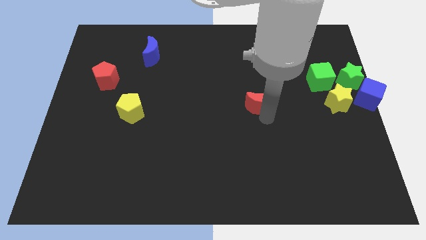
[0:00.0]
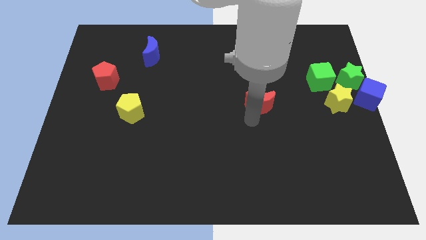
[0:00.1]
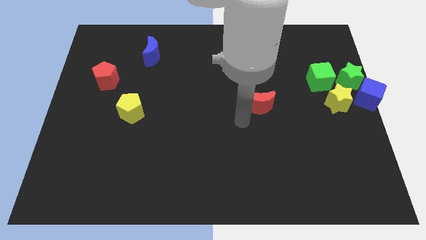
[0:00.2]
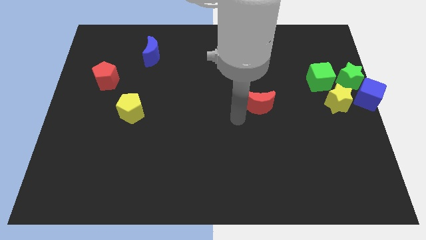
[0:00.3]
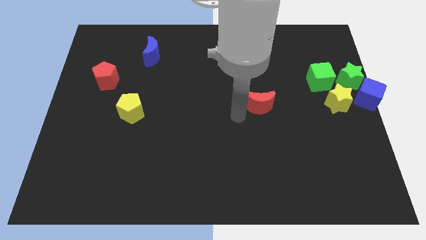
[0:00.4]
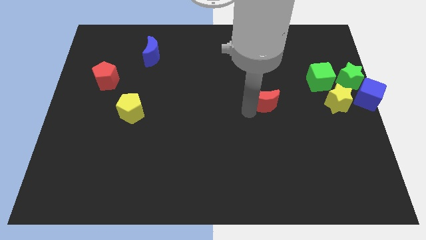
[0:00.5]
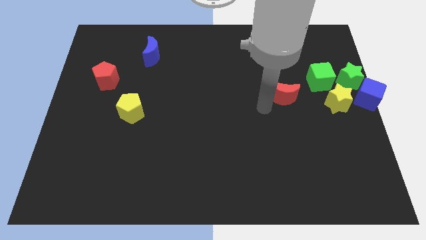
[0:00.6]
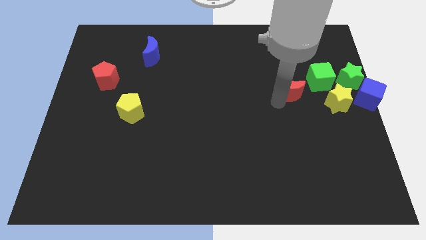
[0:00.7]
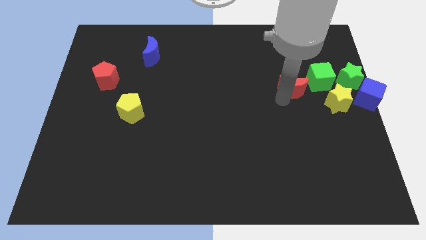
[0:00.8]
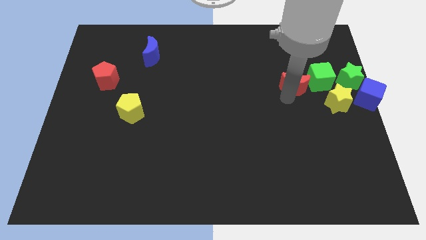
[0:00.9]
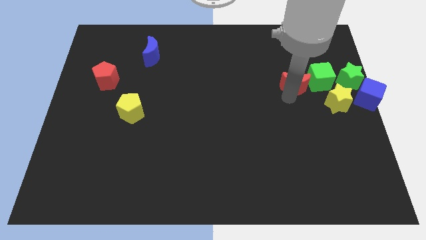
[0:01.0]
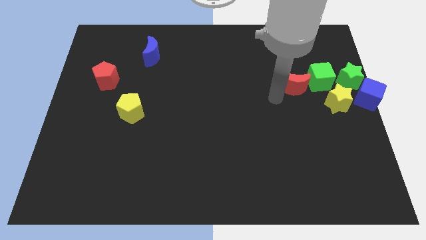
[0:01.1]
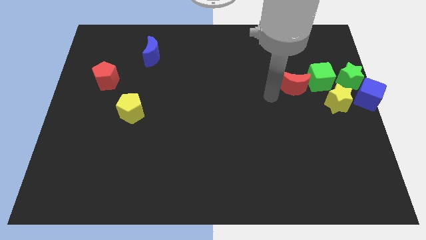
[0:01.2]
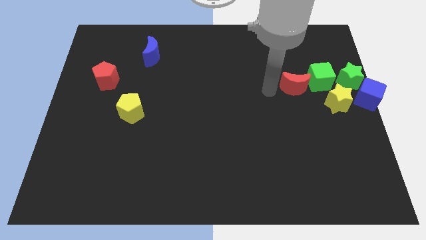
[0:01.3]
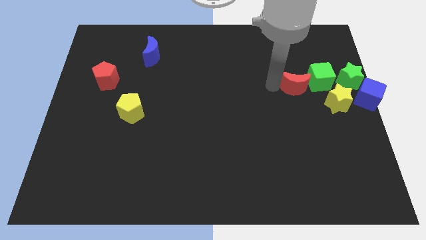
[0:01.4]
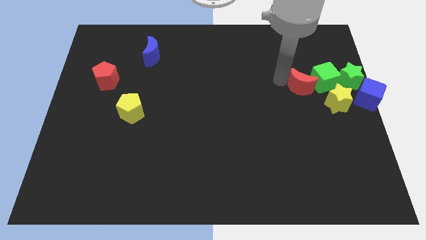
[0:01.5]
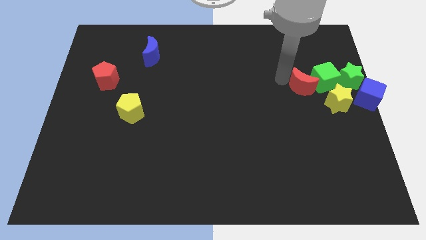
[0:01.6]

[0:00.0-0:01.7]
push the red crescent into the green cube

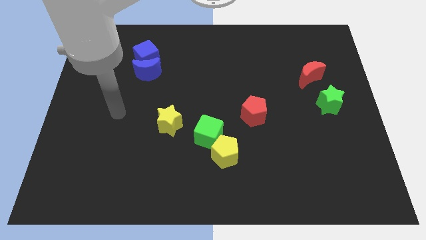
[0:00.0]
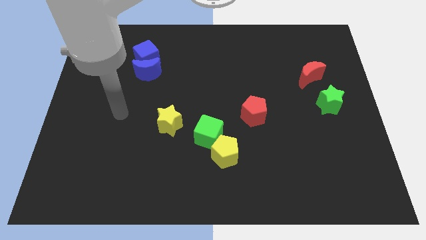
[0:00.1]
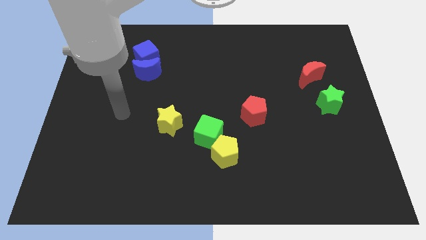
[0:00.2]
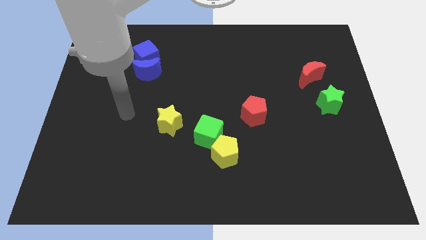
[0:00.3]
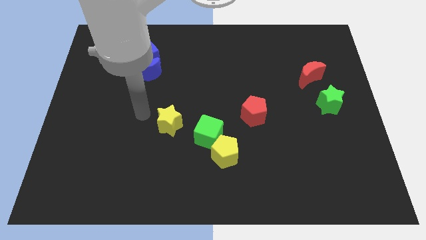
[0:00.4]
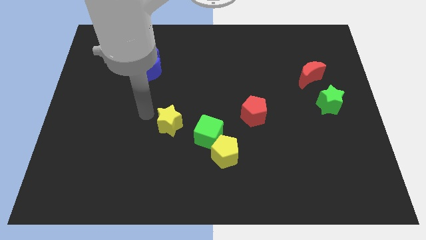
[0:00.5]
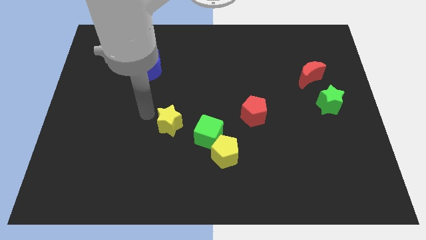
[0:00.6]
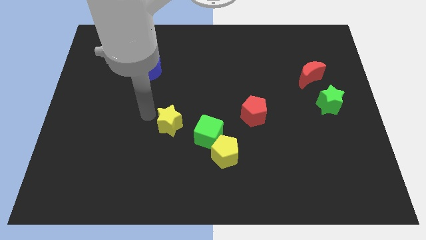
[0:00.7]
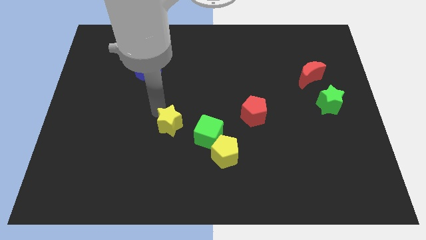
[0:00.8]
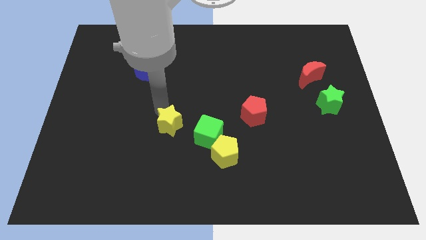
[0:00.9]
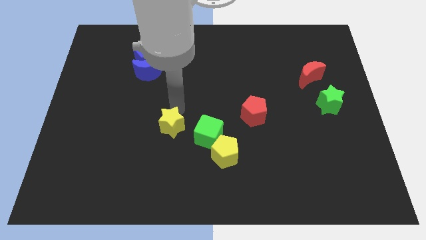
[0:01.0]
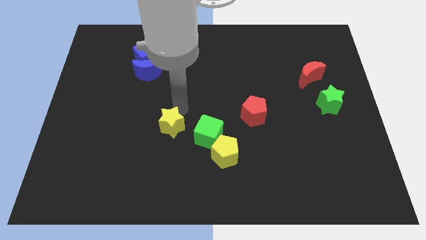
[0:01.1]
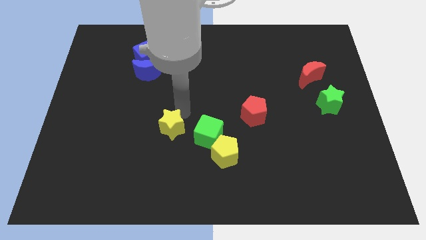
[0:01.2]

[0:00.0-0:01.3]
place the arm above the yellow star

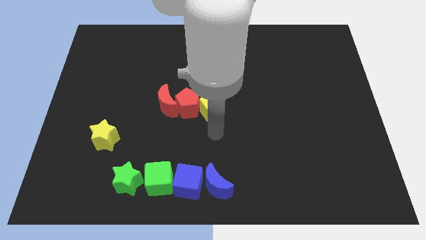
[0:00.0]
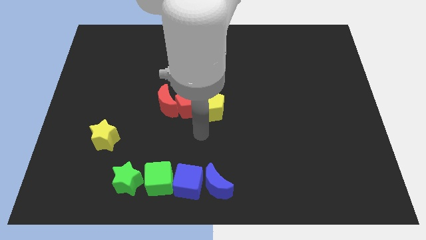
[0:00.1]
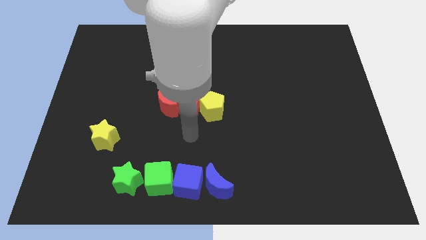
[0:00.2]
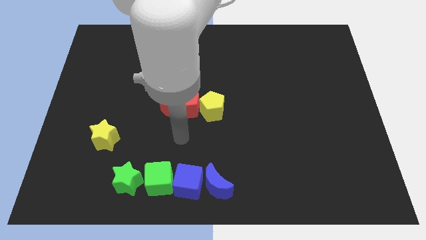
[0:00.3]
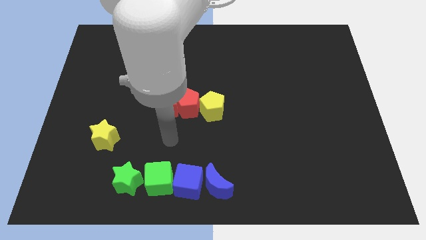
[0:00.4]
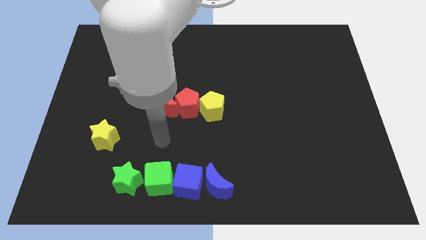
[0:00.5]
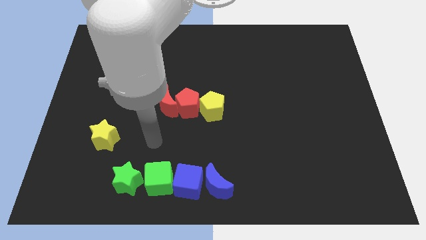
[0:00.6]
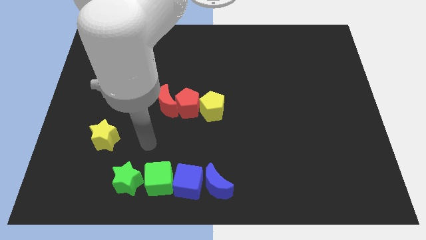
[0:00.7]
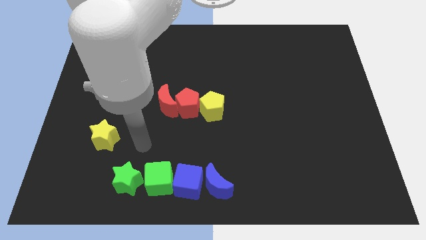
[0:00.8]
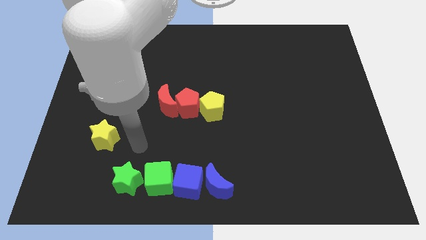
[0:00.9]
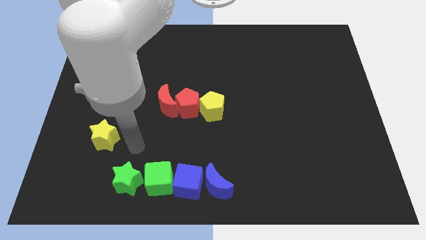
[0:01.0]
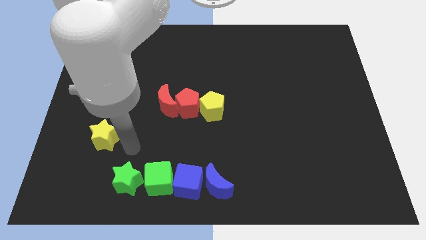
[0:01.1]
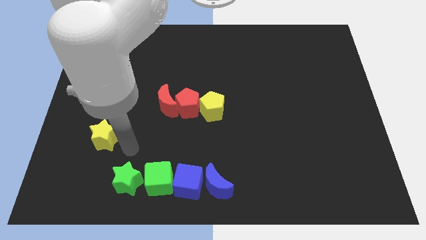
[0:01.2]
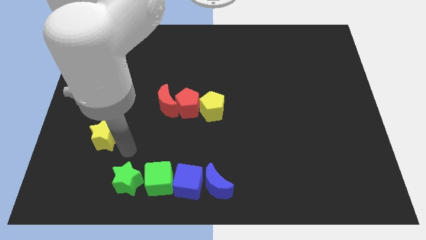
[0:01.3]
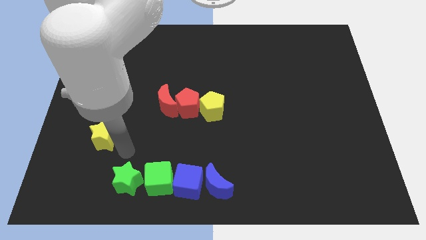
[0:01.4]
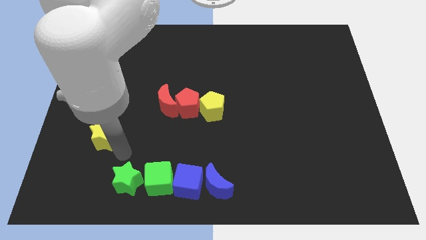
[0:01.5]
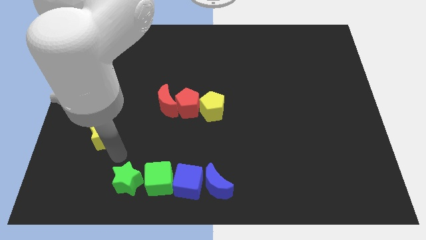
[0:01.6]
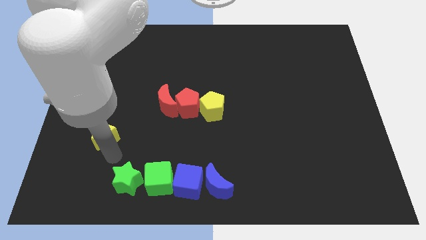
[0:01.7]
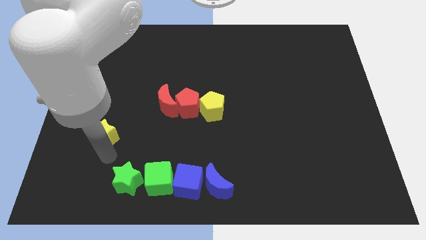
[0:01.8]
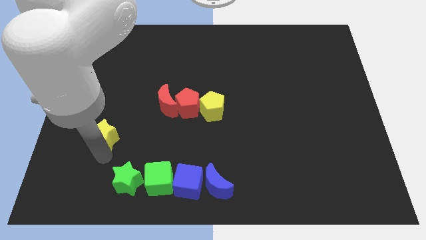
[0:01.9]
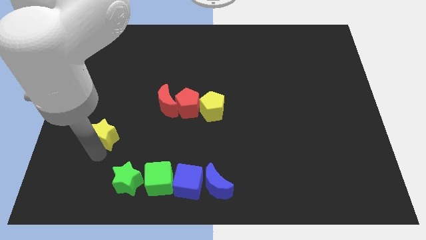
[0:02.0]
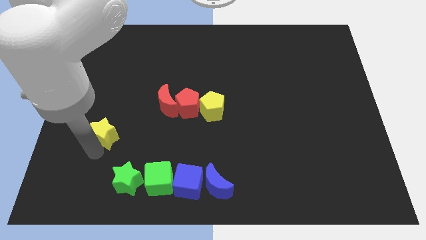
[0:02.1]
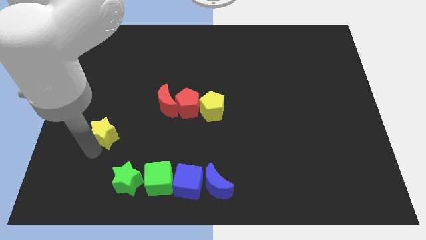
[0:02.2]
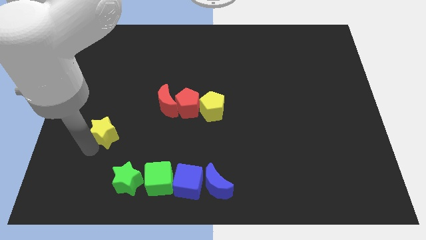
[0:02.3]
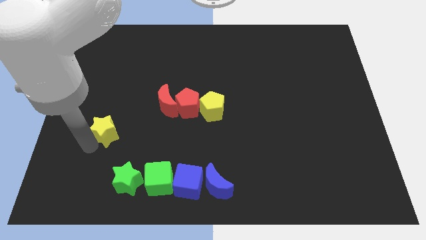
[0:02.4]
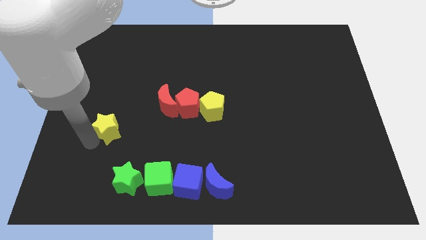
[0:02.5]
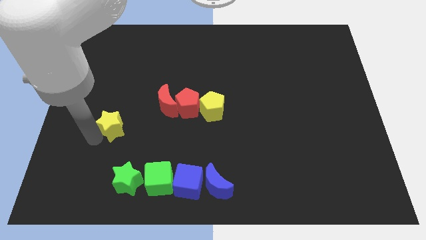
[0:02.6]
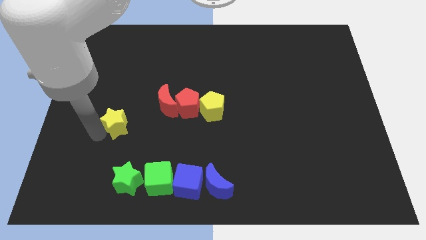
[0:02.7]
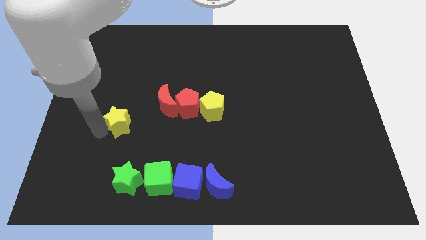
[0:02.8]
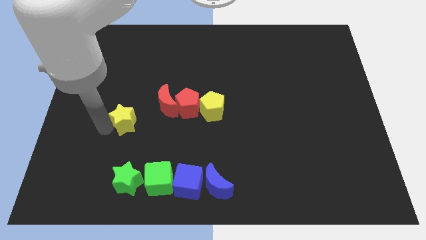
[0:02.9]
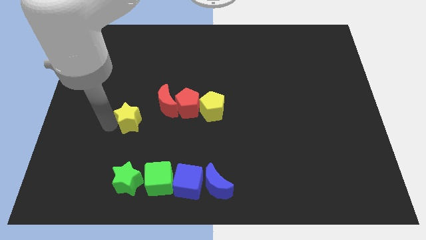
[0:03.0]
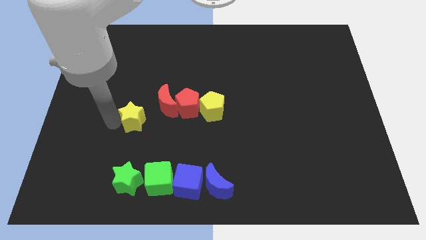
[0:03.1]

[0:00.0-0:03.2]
push the yellow star vertically to the top side of the green star

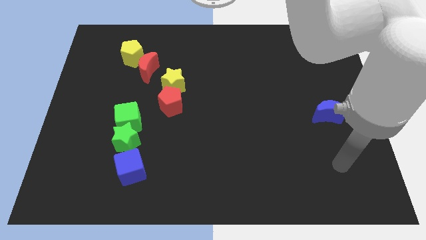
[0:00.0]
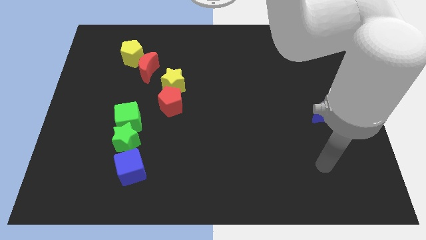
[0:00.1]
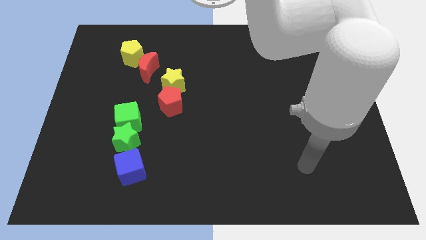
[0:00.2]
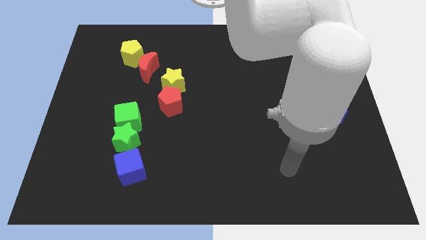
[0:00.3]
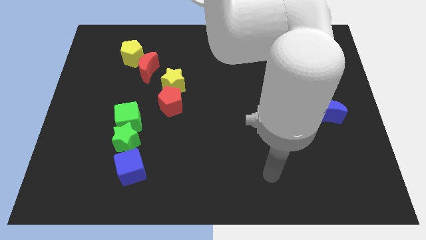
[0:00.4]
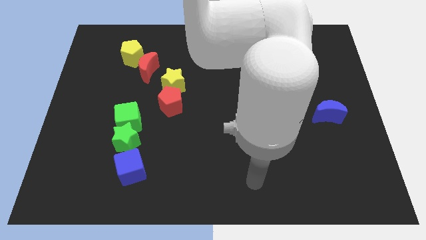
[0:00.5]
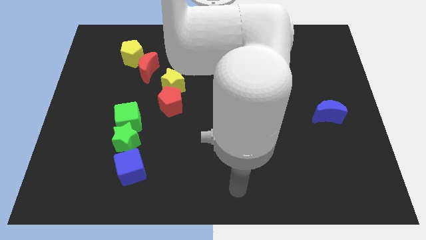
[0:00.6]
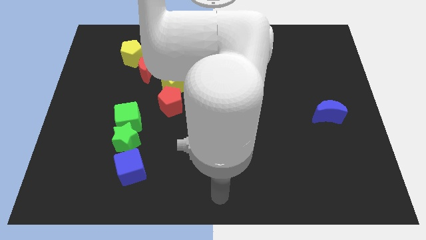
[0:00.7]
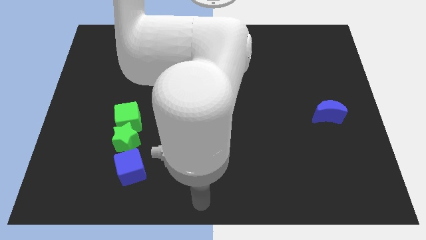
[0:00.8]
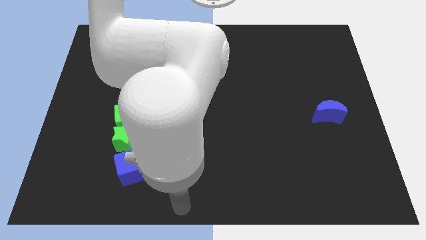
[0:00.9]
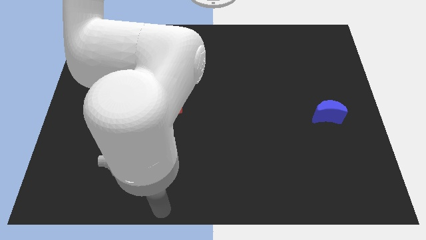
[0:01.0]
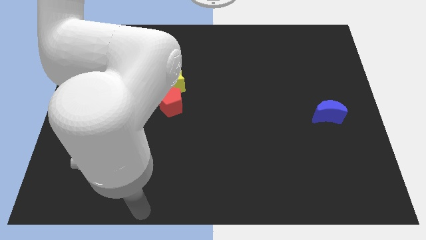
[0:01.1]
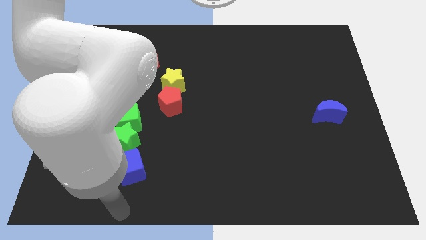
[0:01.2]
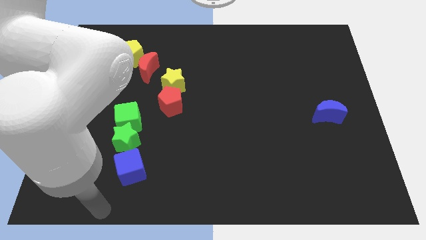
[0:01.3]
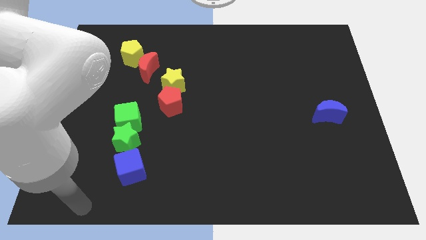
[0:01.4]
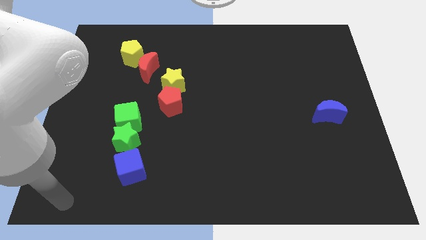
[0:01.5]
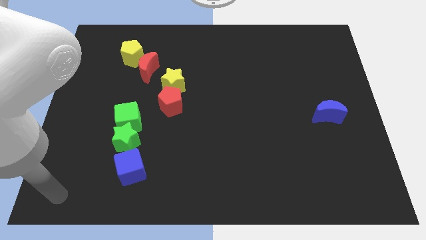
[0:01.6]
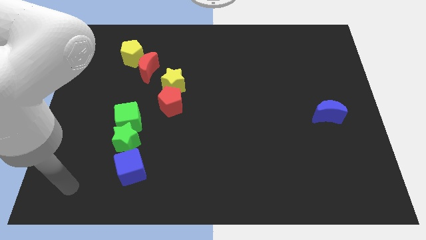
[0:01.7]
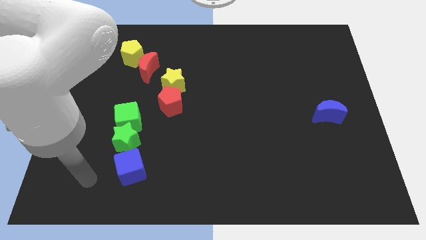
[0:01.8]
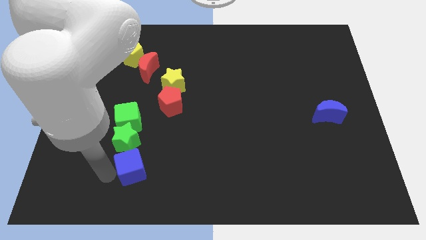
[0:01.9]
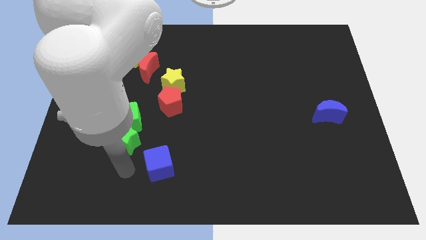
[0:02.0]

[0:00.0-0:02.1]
push the blue cube to the right of the board

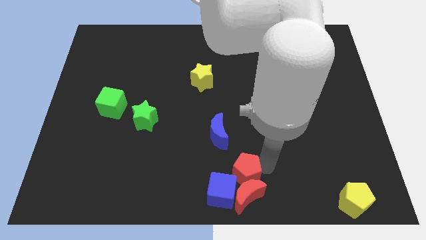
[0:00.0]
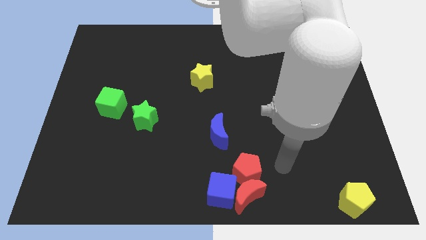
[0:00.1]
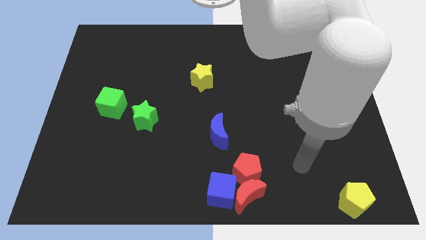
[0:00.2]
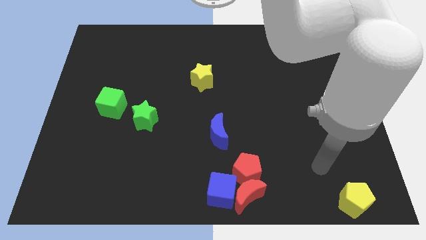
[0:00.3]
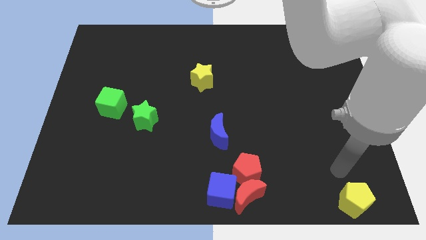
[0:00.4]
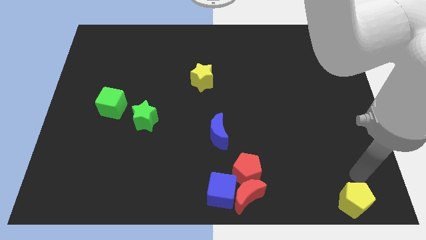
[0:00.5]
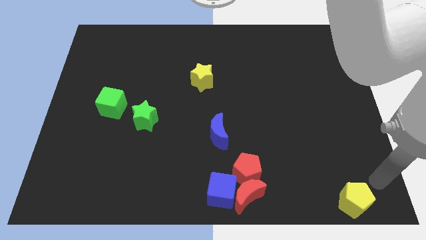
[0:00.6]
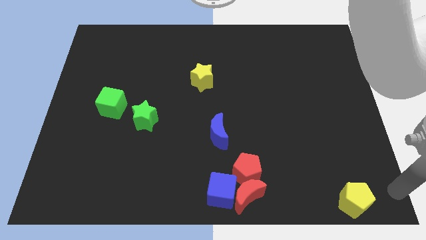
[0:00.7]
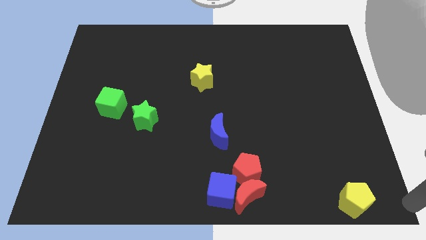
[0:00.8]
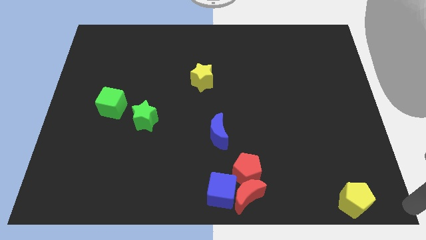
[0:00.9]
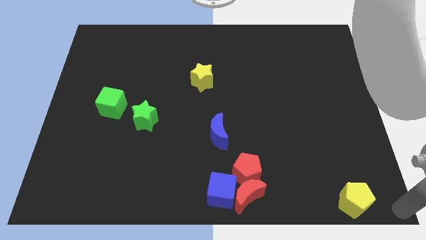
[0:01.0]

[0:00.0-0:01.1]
slide your arm to the bottom right
